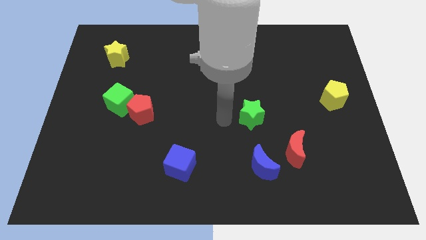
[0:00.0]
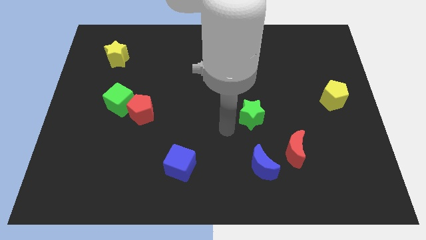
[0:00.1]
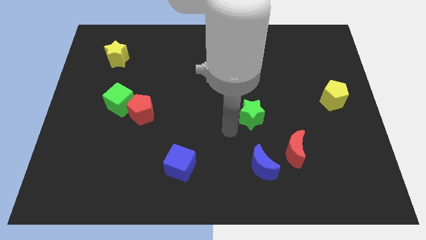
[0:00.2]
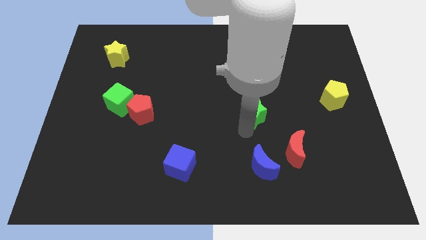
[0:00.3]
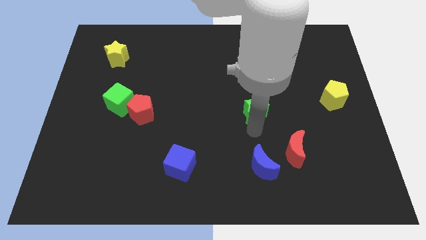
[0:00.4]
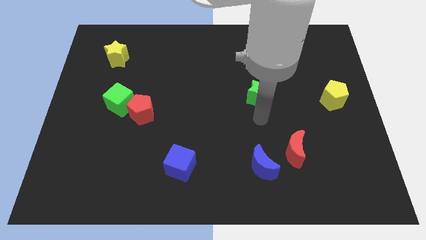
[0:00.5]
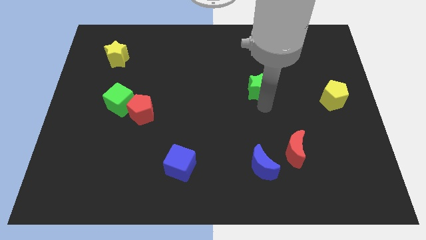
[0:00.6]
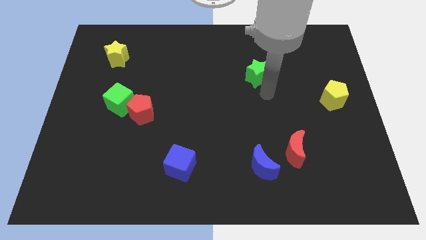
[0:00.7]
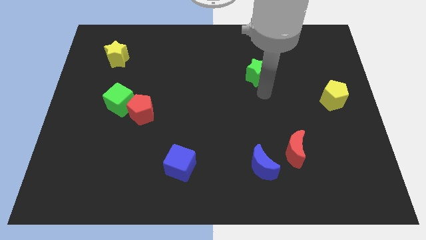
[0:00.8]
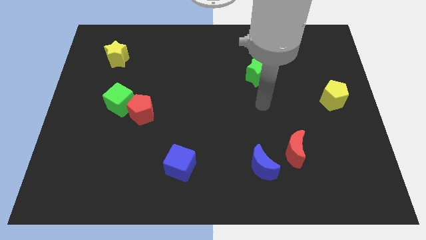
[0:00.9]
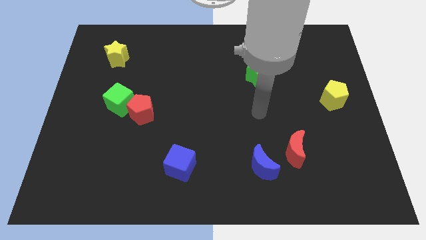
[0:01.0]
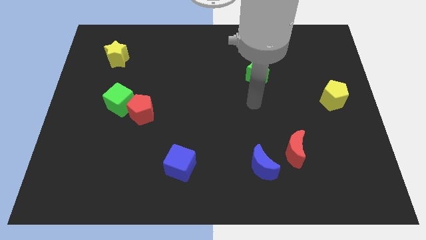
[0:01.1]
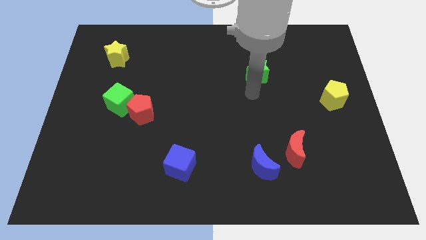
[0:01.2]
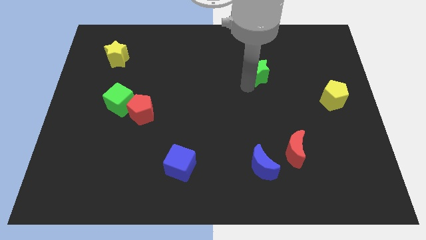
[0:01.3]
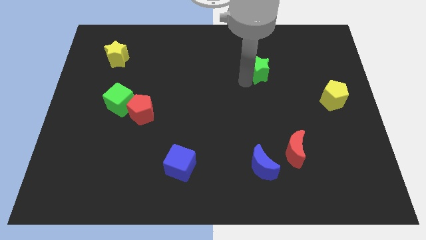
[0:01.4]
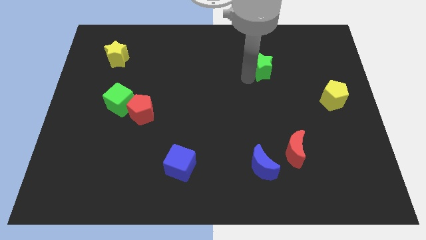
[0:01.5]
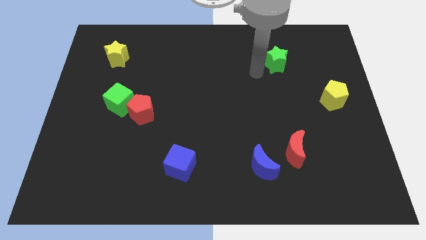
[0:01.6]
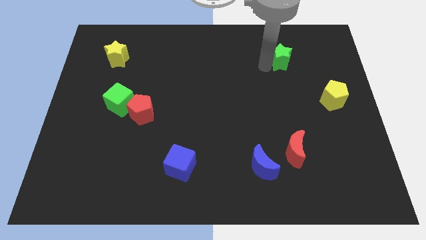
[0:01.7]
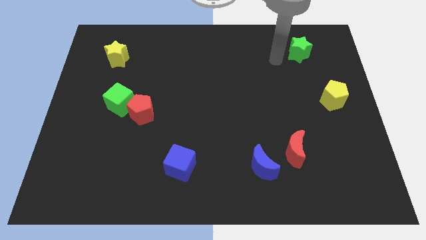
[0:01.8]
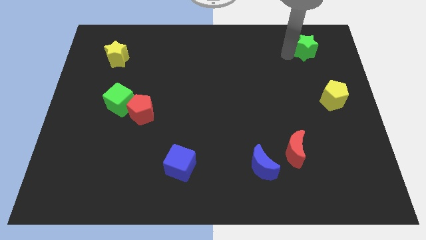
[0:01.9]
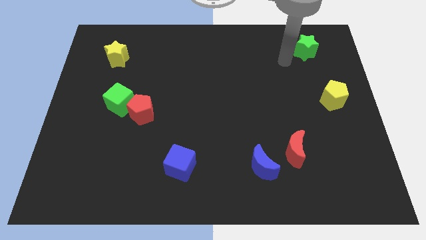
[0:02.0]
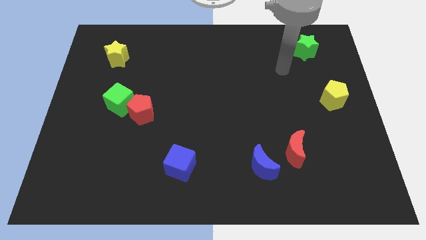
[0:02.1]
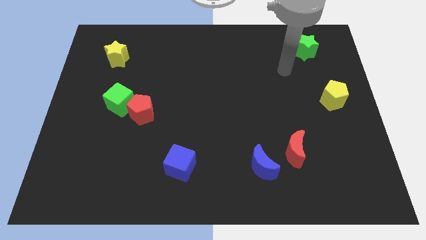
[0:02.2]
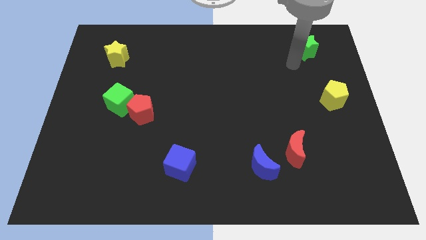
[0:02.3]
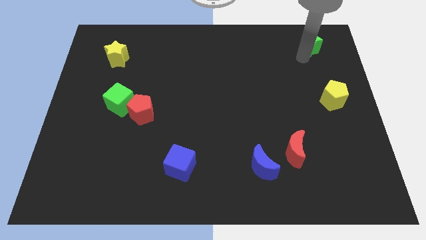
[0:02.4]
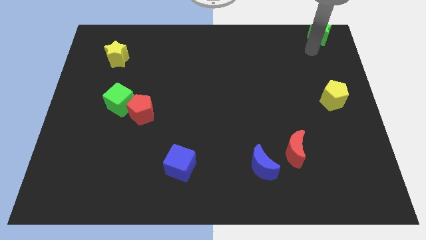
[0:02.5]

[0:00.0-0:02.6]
push the green star vertically to the top side of the yellow pentagon

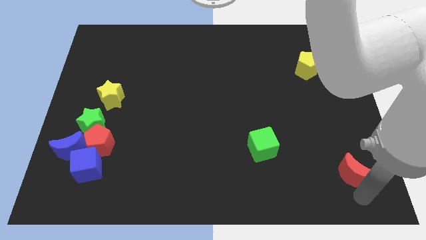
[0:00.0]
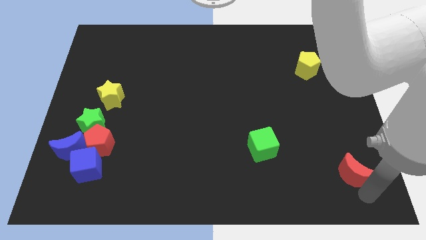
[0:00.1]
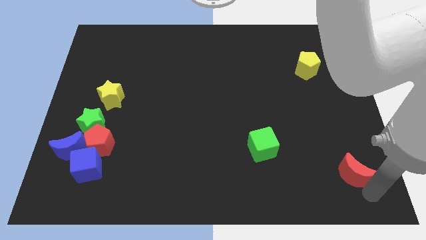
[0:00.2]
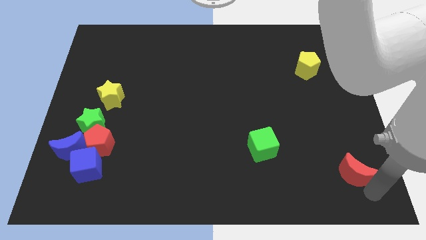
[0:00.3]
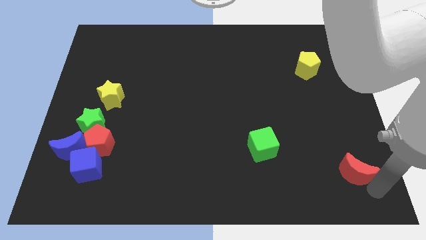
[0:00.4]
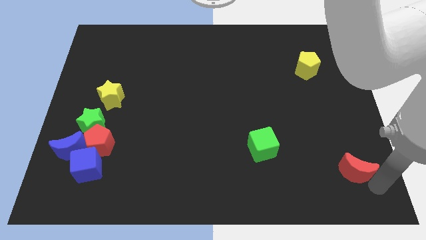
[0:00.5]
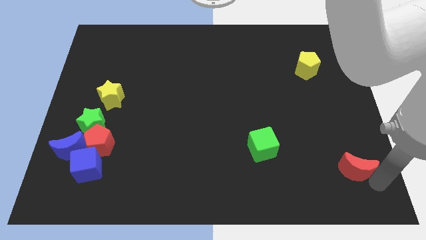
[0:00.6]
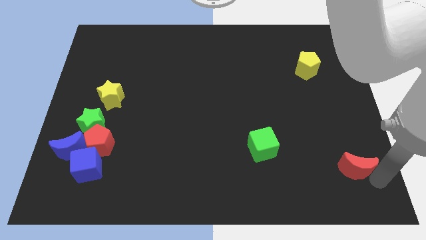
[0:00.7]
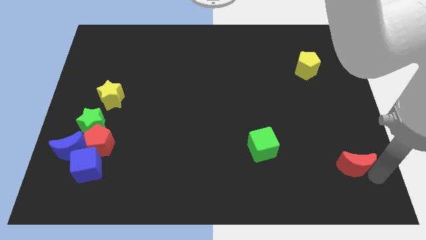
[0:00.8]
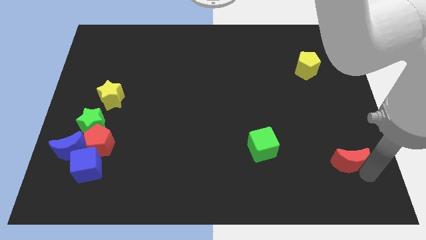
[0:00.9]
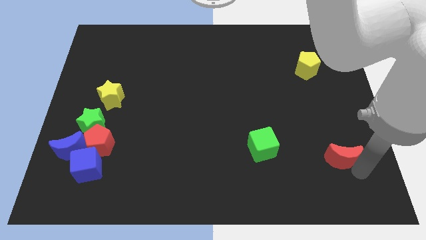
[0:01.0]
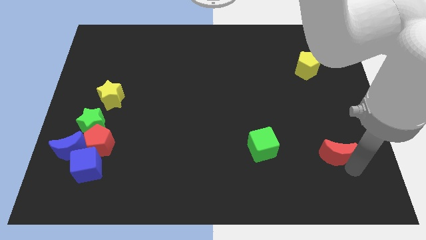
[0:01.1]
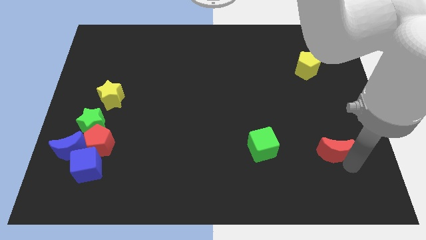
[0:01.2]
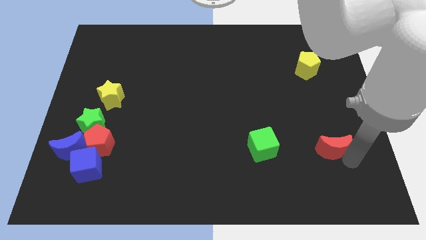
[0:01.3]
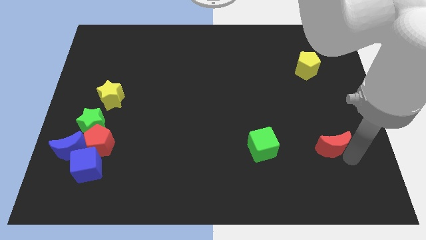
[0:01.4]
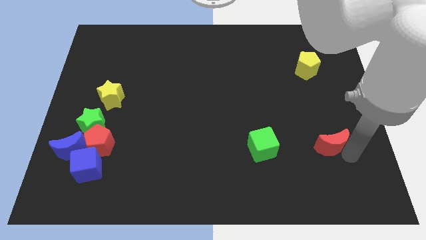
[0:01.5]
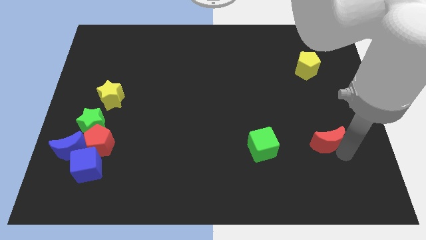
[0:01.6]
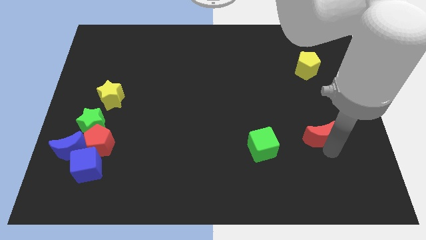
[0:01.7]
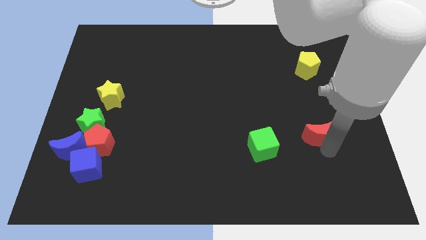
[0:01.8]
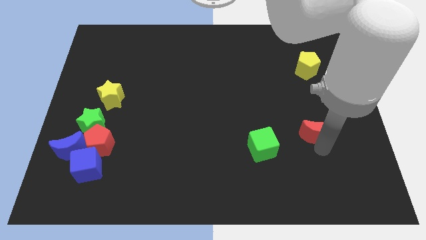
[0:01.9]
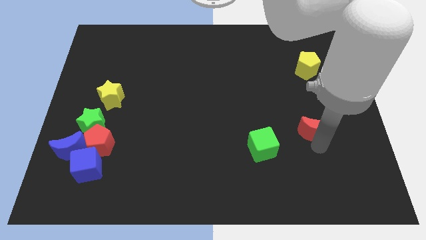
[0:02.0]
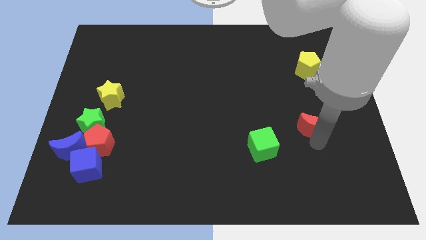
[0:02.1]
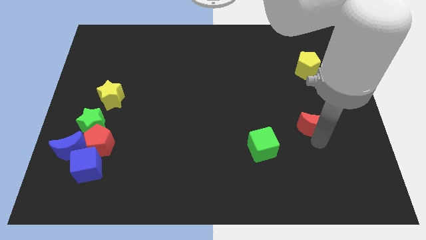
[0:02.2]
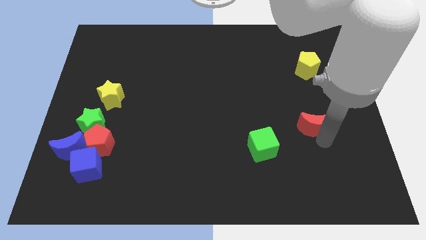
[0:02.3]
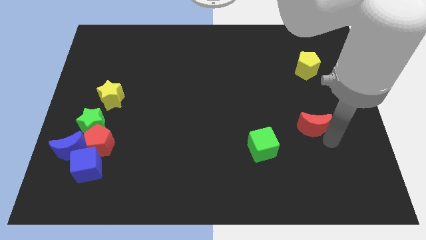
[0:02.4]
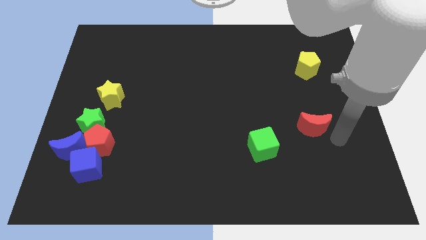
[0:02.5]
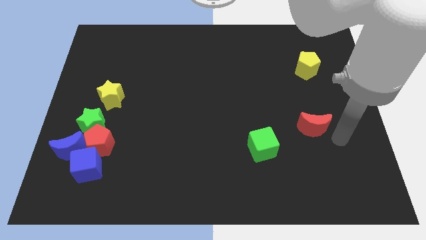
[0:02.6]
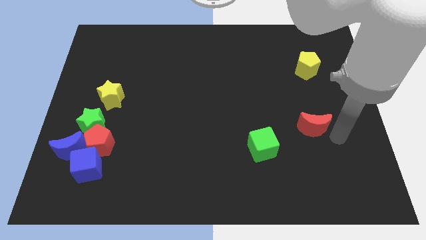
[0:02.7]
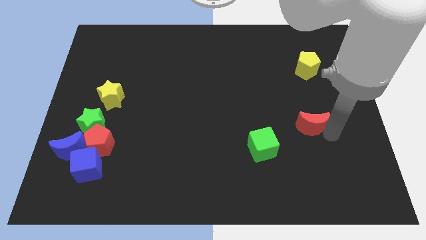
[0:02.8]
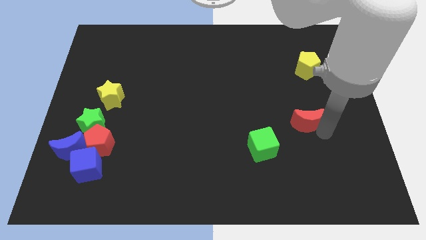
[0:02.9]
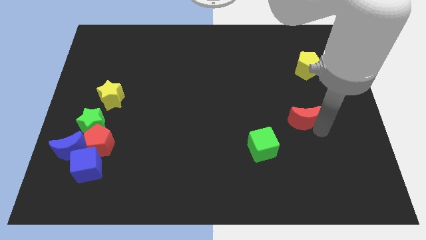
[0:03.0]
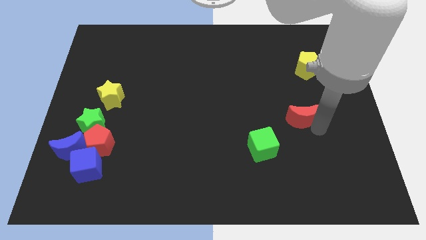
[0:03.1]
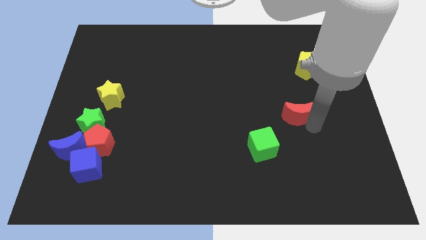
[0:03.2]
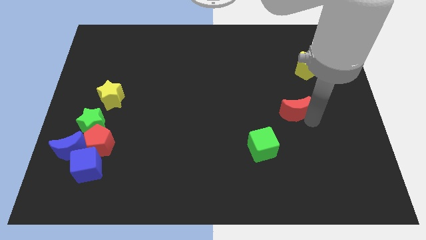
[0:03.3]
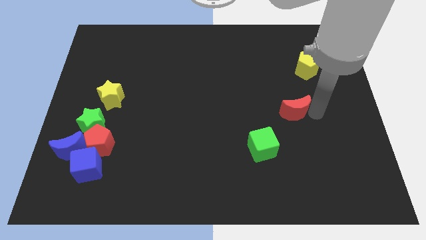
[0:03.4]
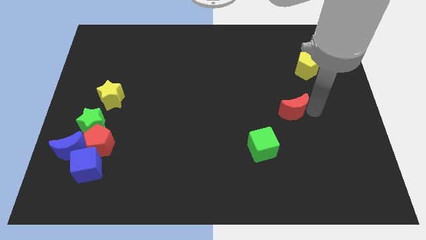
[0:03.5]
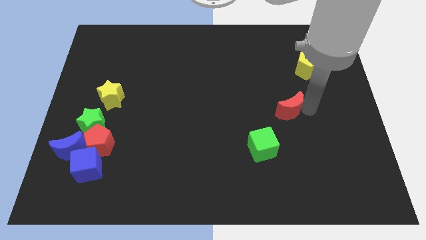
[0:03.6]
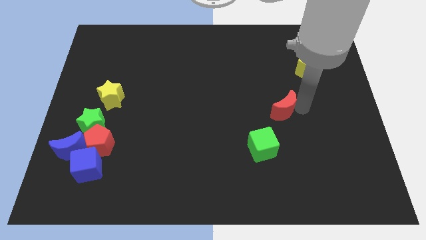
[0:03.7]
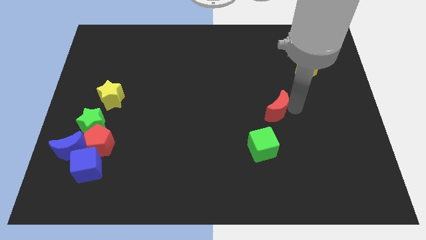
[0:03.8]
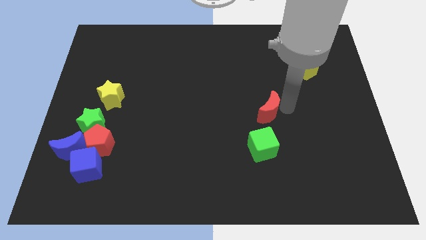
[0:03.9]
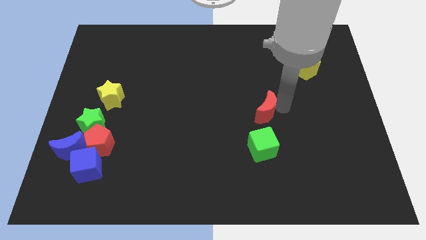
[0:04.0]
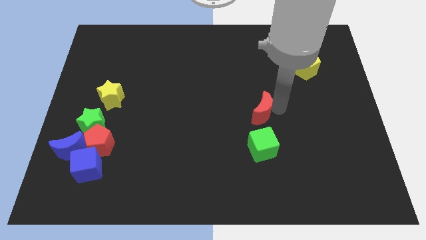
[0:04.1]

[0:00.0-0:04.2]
push the red crescent to the top of the green cube

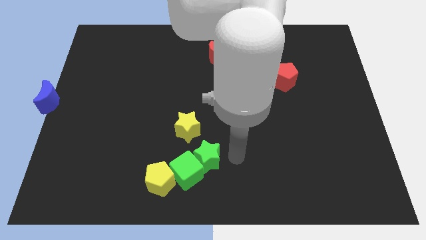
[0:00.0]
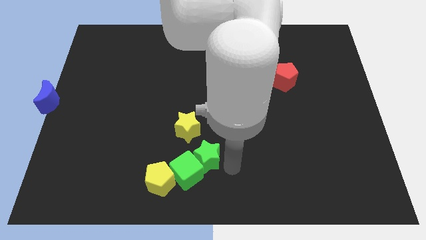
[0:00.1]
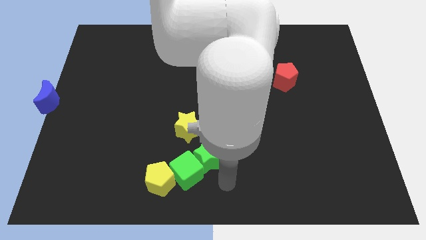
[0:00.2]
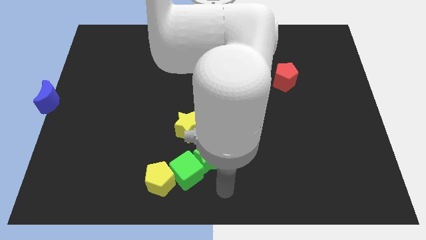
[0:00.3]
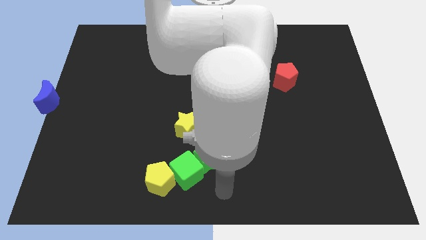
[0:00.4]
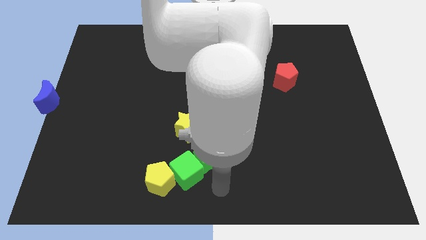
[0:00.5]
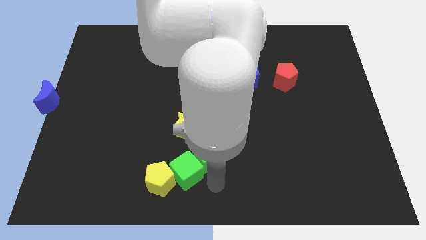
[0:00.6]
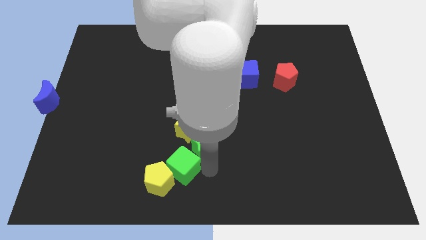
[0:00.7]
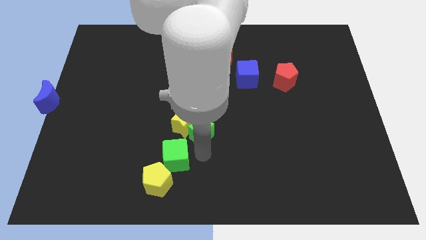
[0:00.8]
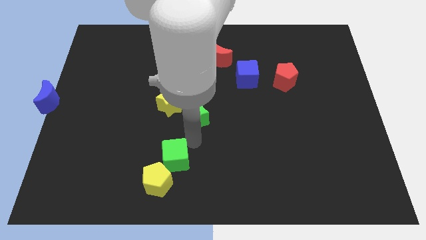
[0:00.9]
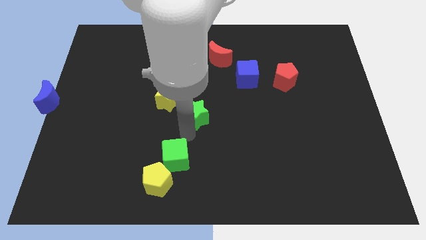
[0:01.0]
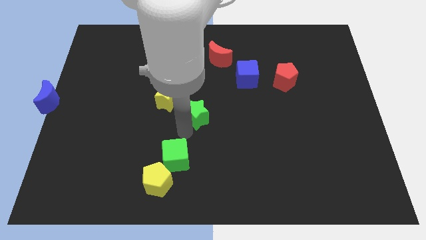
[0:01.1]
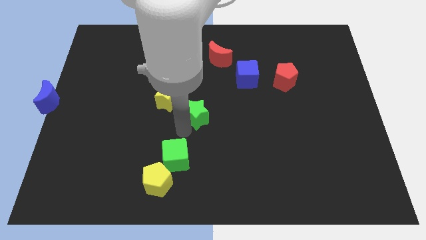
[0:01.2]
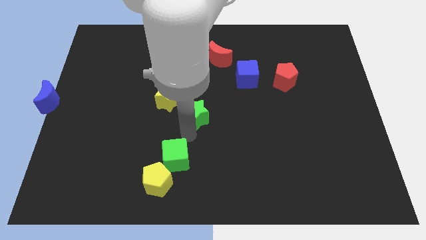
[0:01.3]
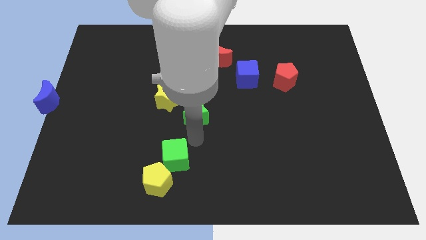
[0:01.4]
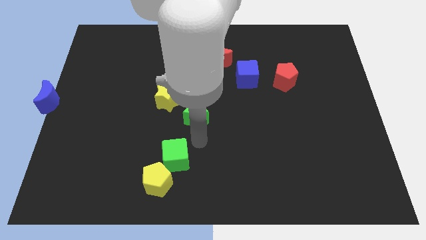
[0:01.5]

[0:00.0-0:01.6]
move green star upwards

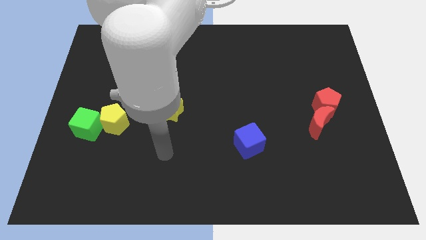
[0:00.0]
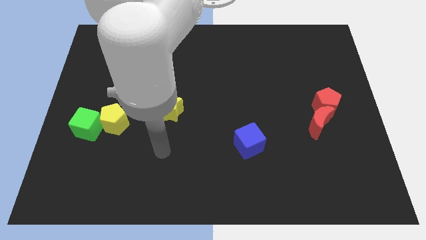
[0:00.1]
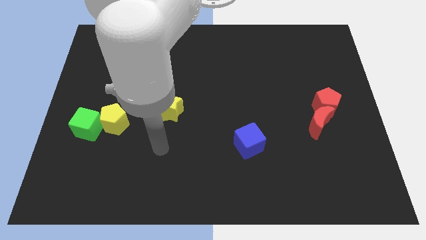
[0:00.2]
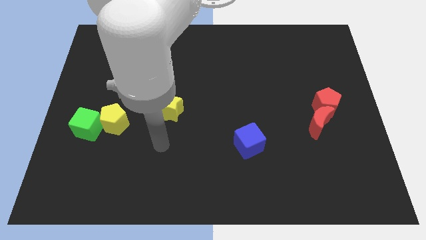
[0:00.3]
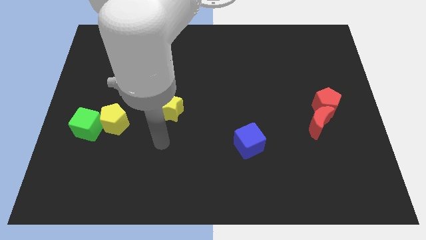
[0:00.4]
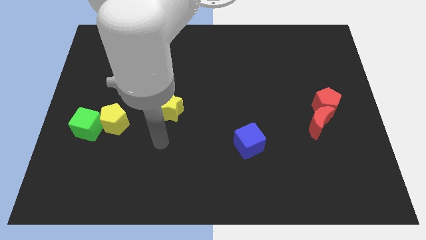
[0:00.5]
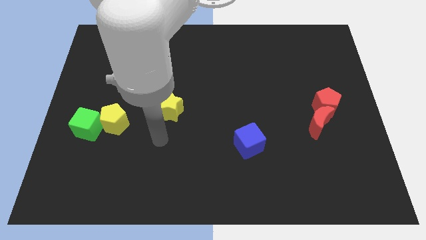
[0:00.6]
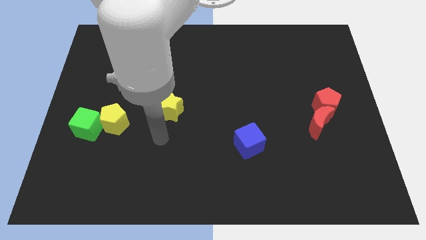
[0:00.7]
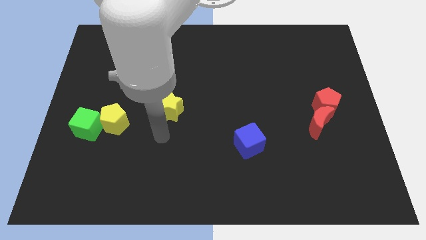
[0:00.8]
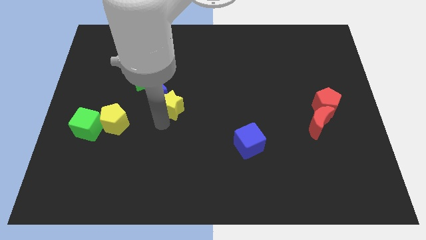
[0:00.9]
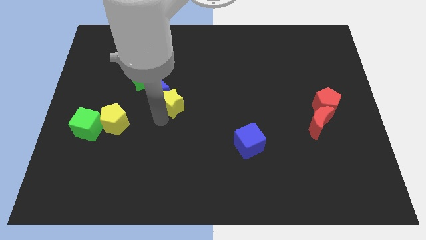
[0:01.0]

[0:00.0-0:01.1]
tap on the bottom side of yellow star
